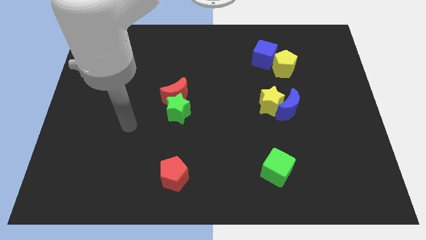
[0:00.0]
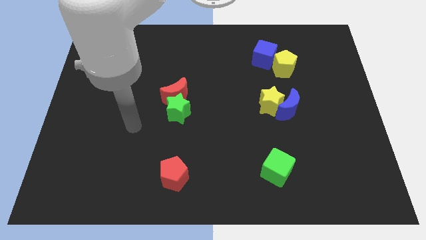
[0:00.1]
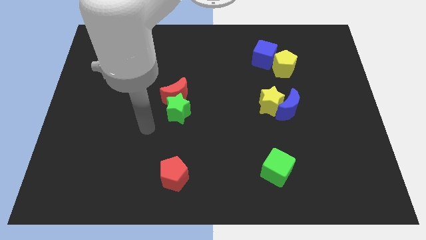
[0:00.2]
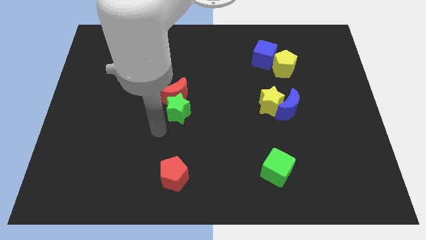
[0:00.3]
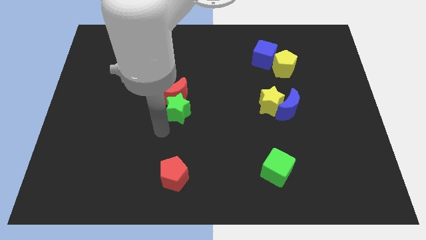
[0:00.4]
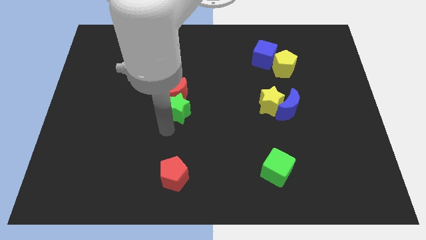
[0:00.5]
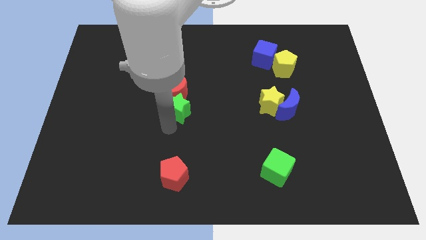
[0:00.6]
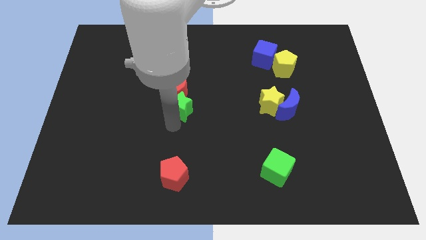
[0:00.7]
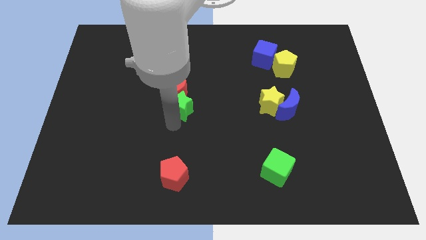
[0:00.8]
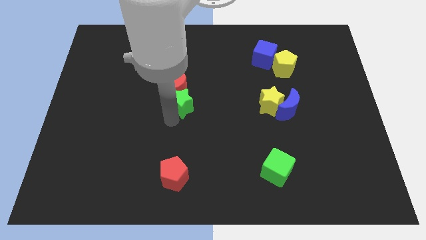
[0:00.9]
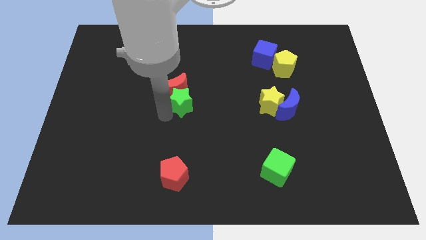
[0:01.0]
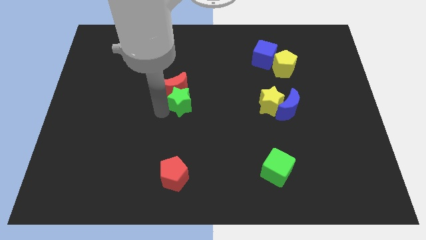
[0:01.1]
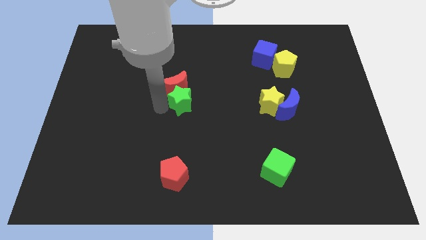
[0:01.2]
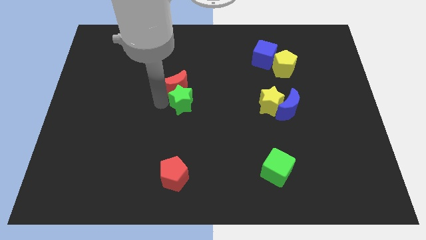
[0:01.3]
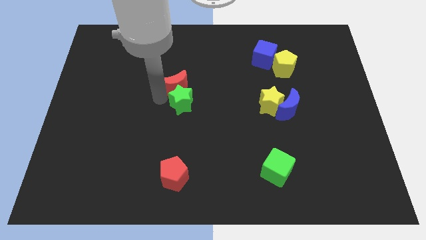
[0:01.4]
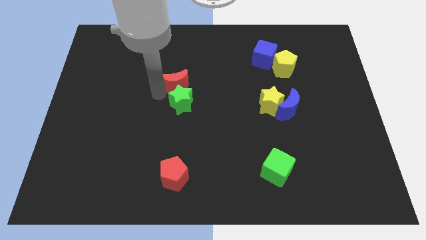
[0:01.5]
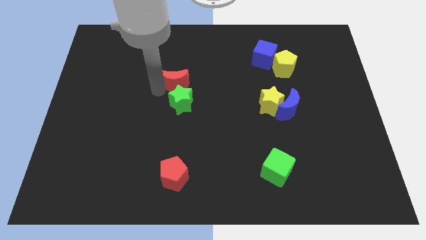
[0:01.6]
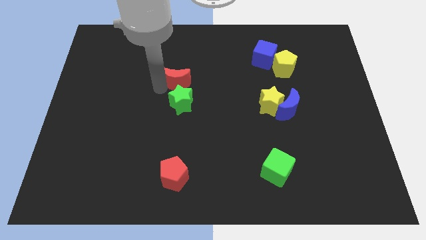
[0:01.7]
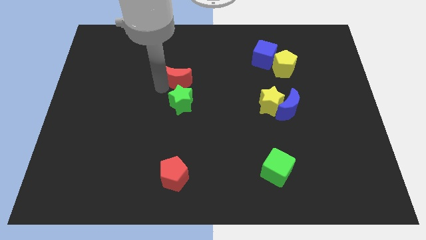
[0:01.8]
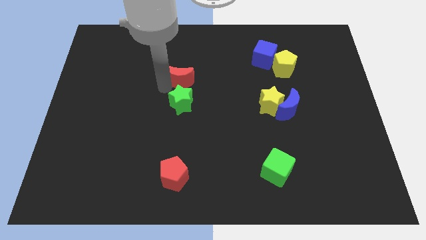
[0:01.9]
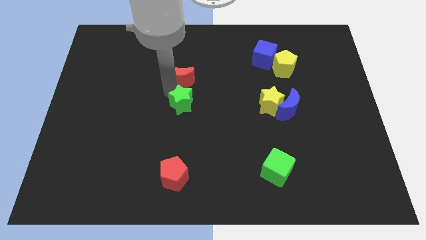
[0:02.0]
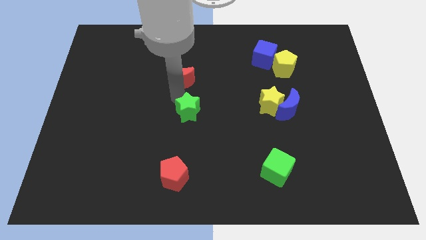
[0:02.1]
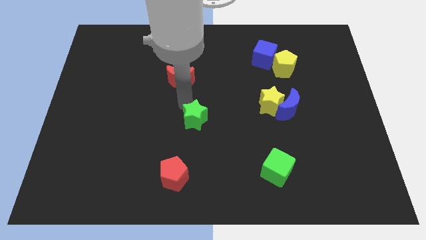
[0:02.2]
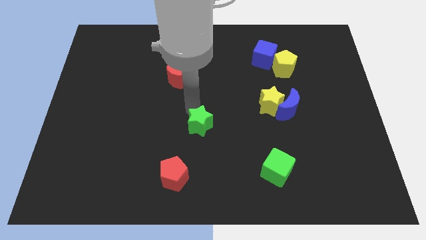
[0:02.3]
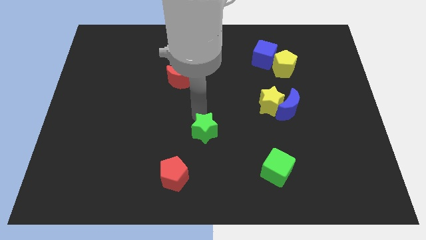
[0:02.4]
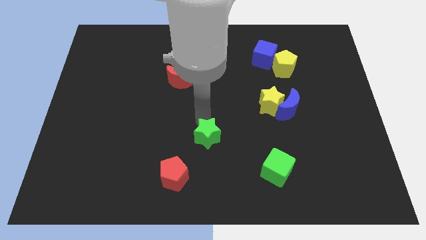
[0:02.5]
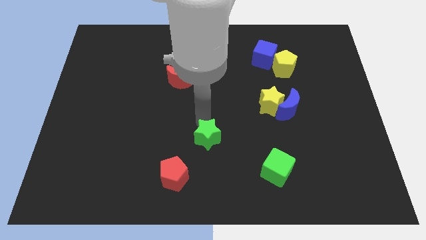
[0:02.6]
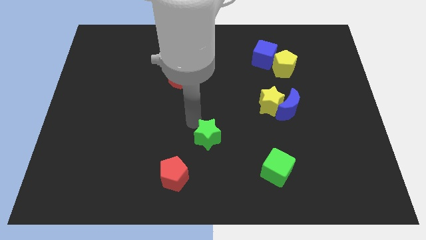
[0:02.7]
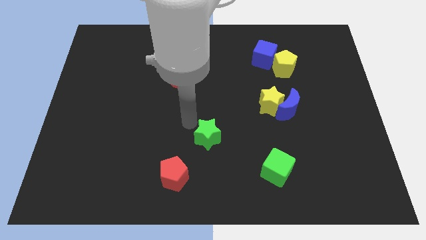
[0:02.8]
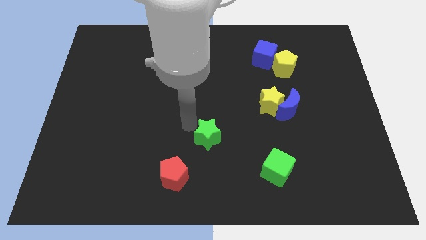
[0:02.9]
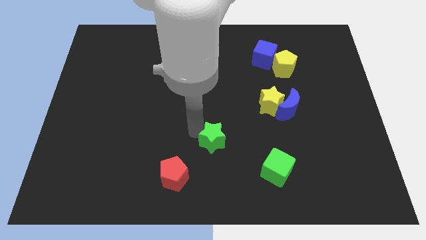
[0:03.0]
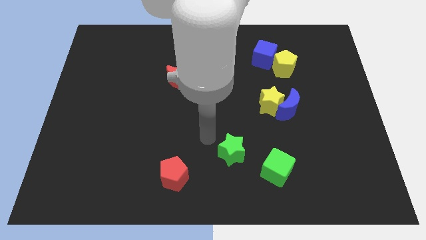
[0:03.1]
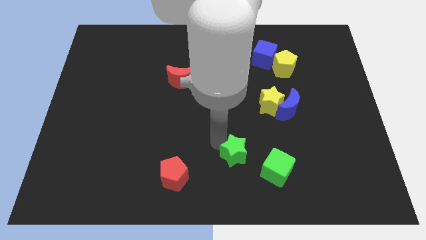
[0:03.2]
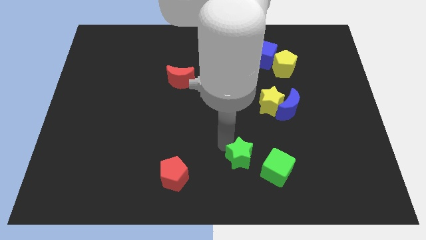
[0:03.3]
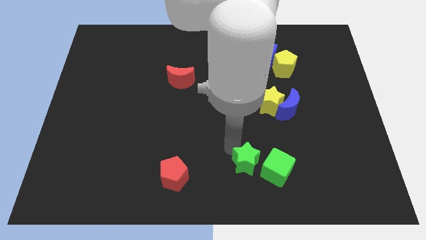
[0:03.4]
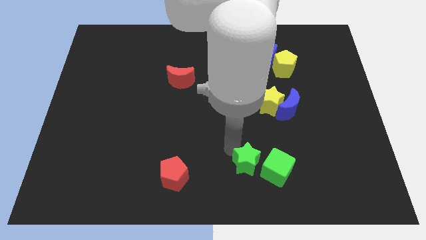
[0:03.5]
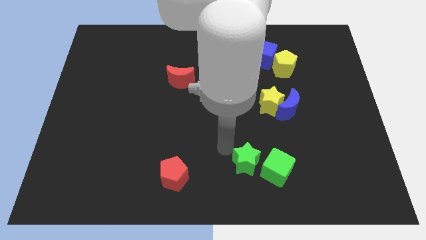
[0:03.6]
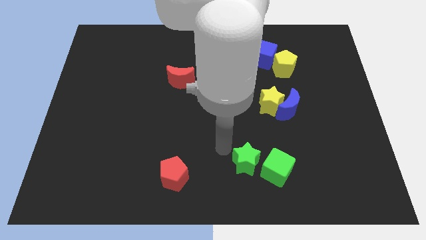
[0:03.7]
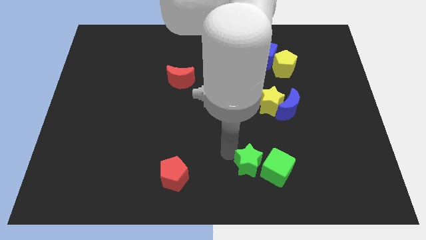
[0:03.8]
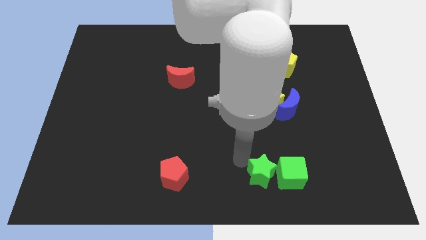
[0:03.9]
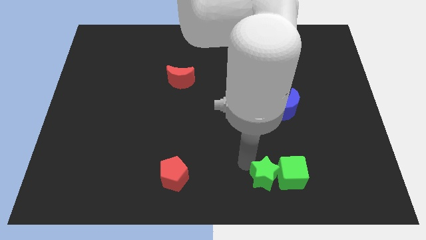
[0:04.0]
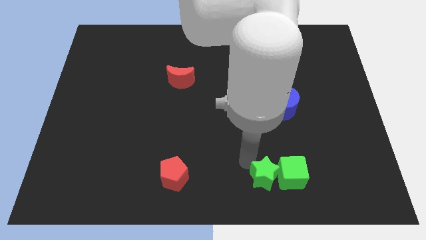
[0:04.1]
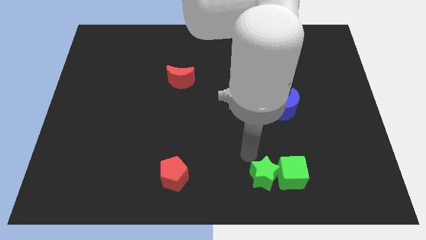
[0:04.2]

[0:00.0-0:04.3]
move the green star left to the green cube

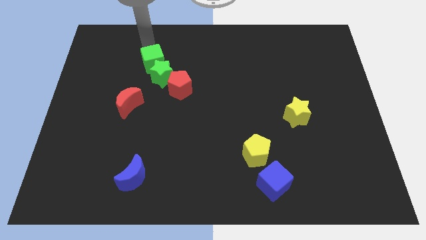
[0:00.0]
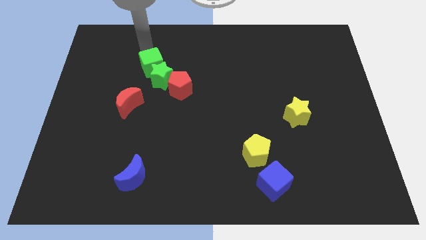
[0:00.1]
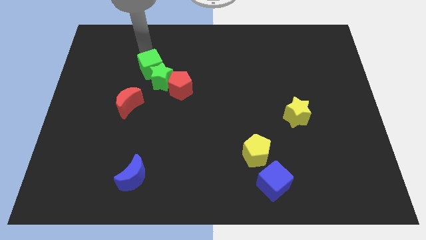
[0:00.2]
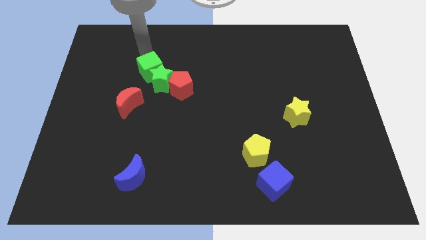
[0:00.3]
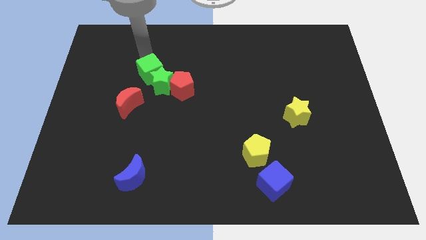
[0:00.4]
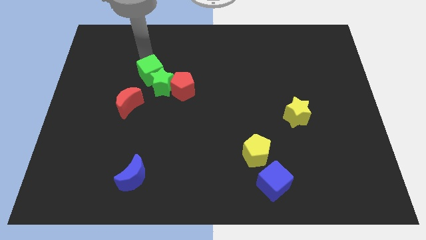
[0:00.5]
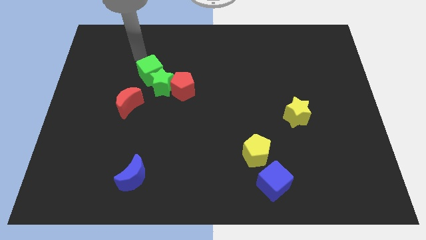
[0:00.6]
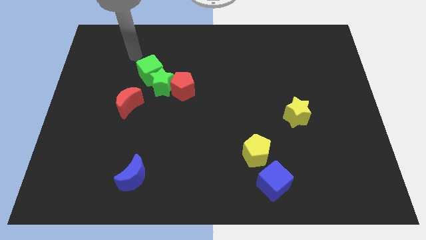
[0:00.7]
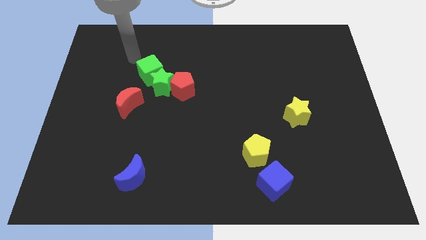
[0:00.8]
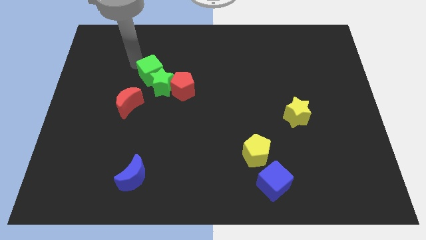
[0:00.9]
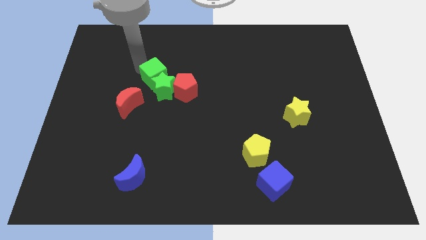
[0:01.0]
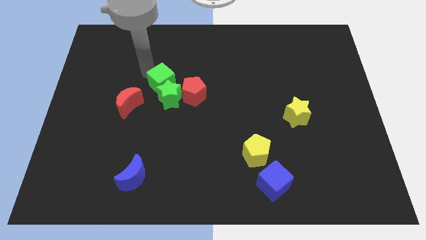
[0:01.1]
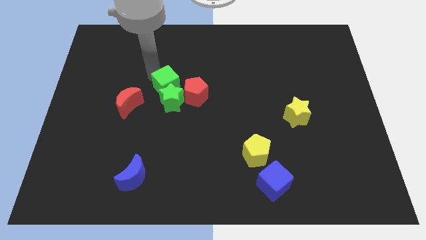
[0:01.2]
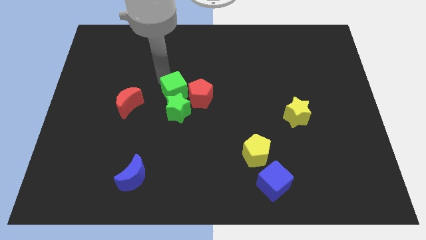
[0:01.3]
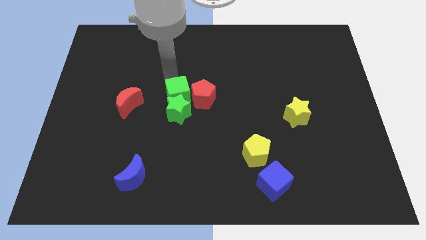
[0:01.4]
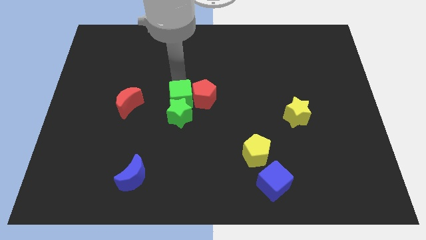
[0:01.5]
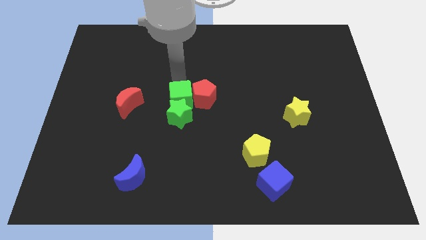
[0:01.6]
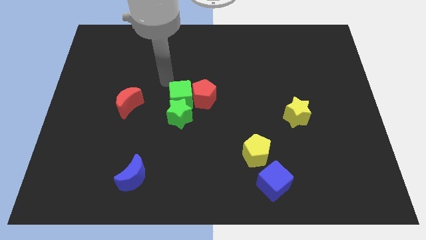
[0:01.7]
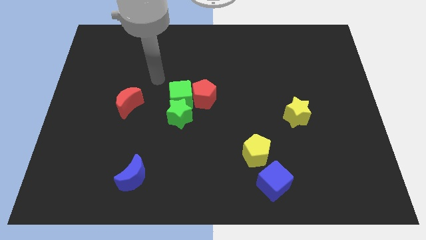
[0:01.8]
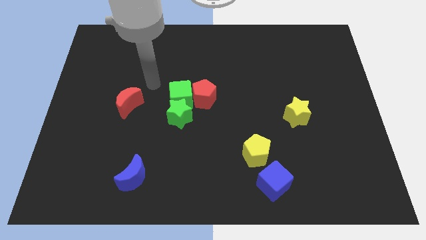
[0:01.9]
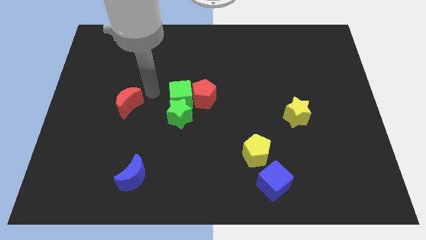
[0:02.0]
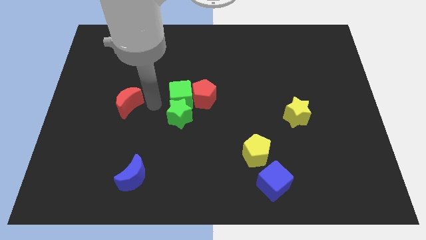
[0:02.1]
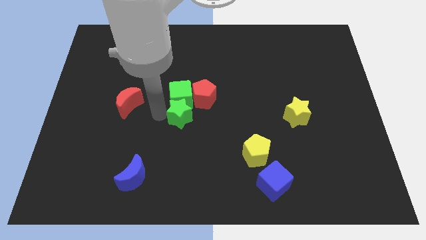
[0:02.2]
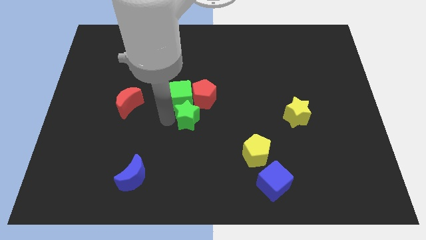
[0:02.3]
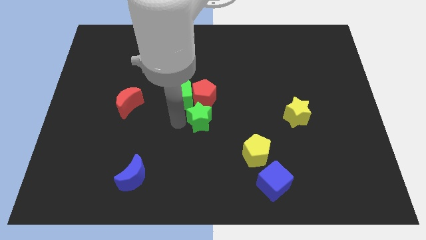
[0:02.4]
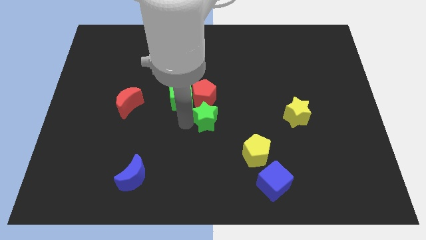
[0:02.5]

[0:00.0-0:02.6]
move a group of blocks to the centre of the board

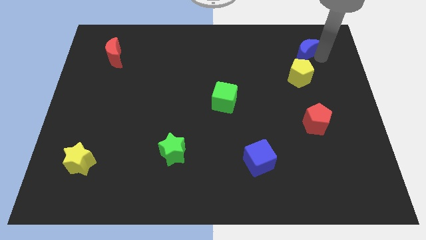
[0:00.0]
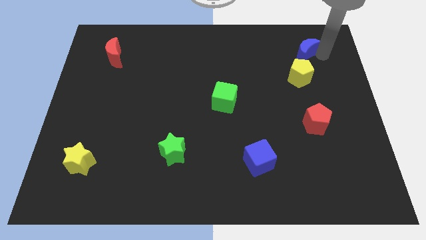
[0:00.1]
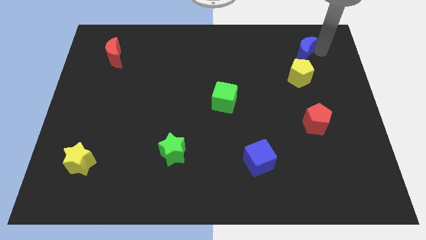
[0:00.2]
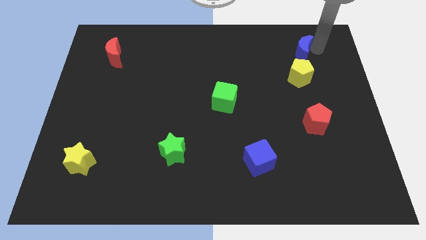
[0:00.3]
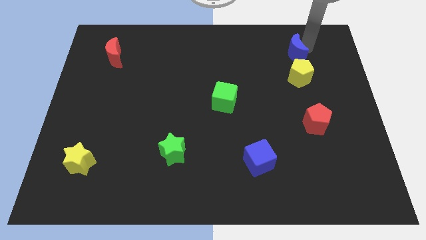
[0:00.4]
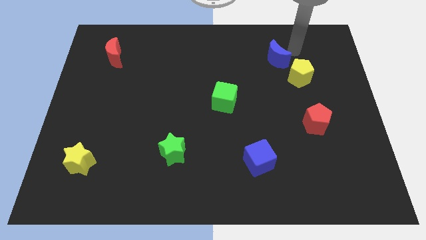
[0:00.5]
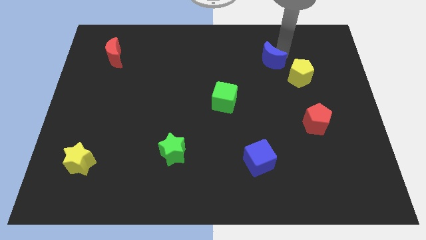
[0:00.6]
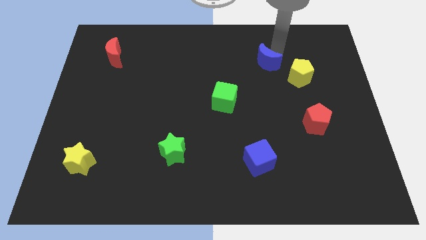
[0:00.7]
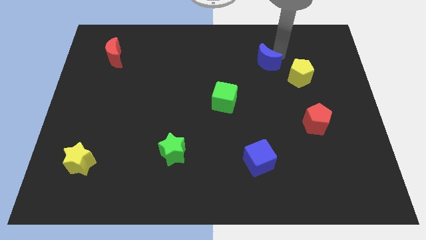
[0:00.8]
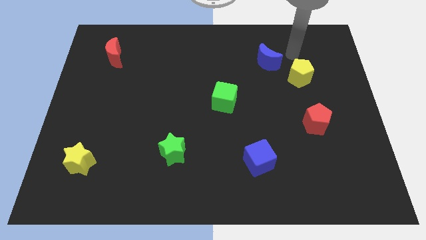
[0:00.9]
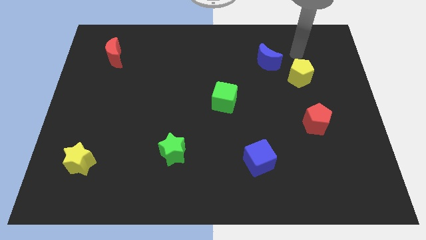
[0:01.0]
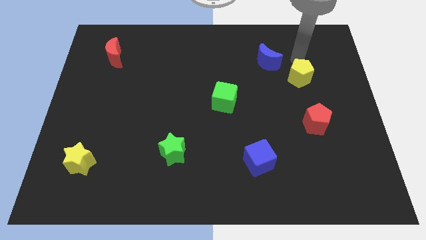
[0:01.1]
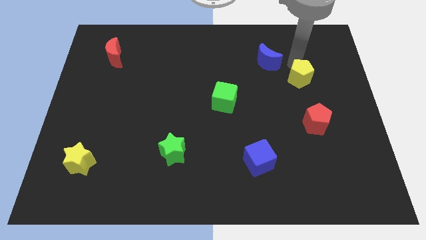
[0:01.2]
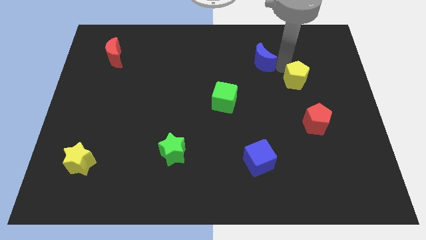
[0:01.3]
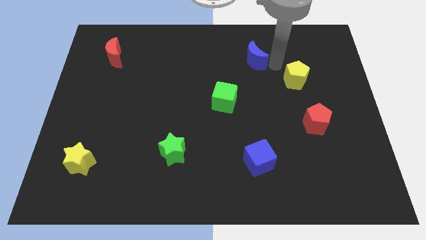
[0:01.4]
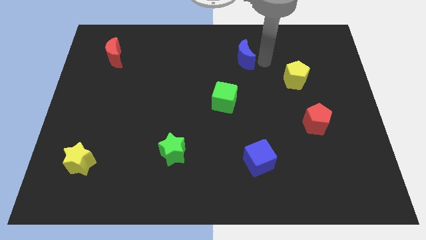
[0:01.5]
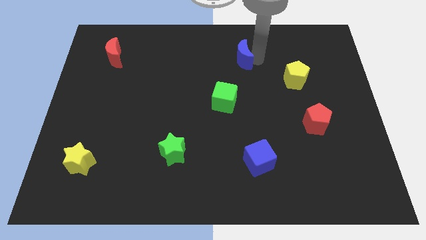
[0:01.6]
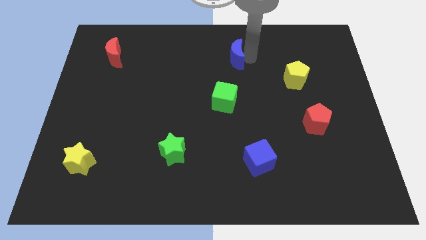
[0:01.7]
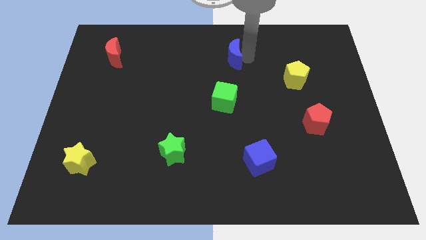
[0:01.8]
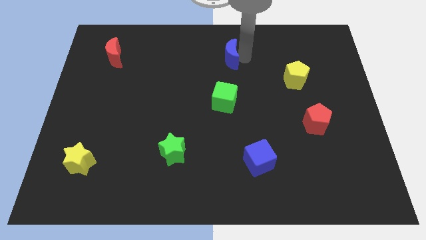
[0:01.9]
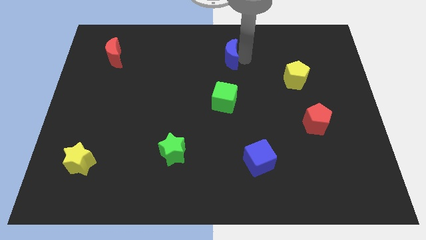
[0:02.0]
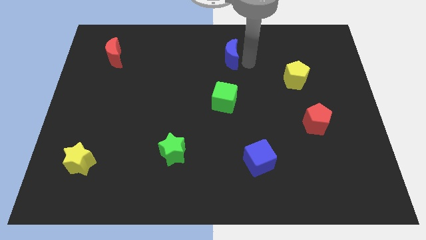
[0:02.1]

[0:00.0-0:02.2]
move the blue moon vertical above green cube
